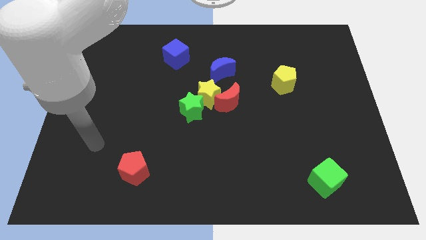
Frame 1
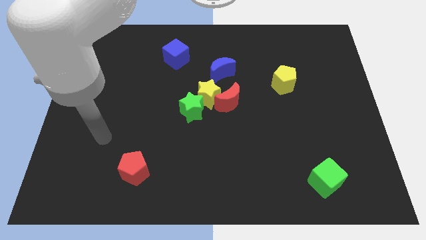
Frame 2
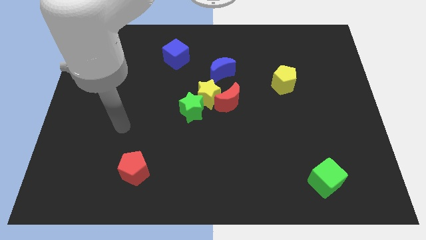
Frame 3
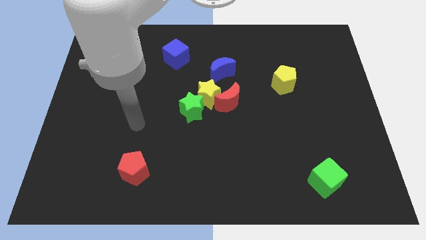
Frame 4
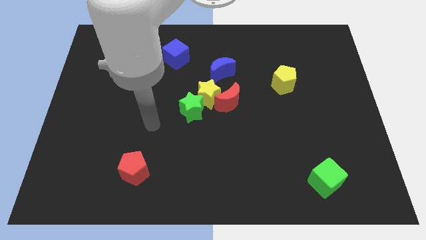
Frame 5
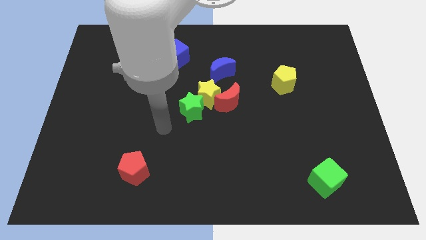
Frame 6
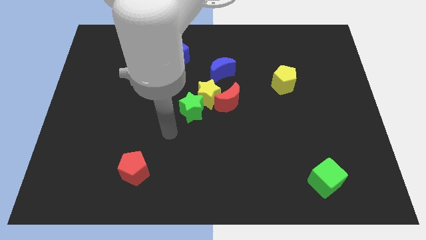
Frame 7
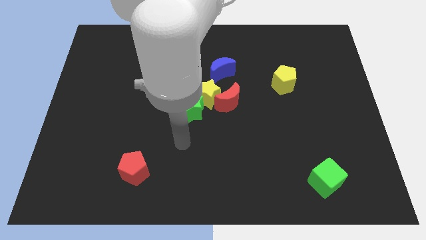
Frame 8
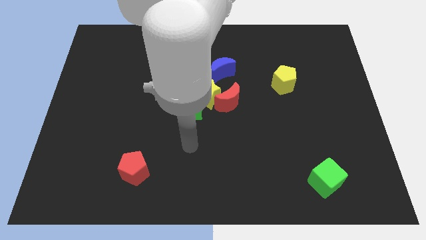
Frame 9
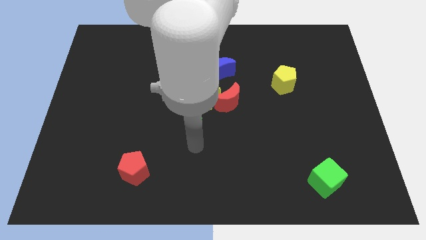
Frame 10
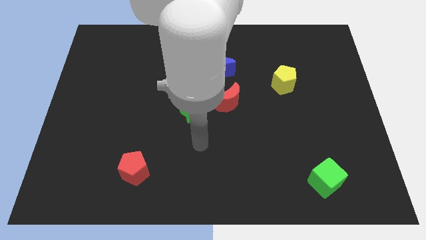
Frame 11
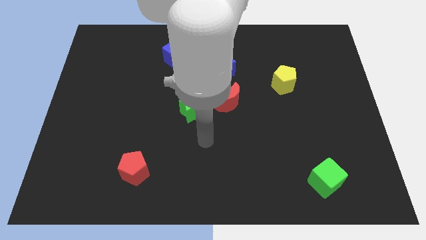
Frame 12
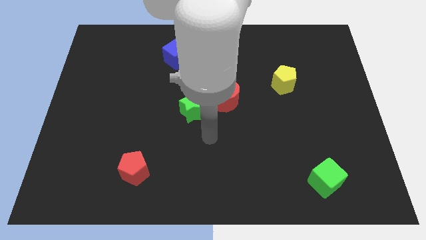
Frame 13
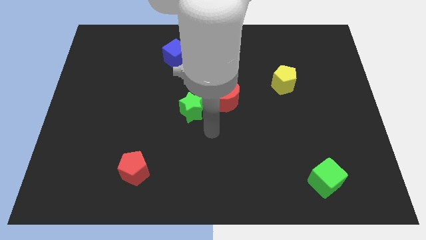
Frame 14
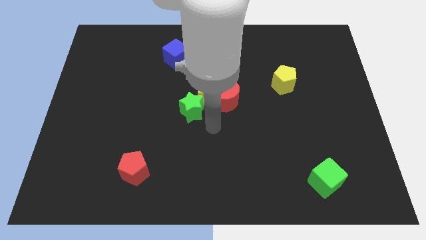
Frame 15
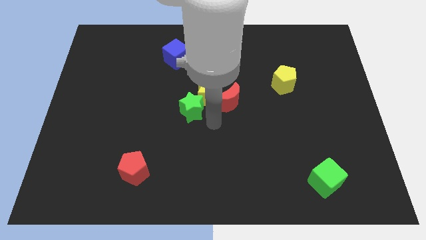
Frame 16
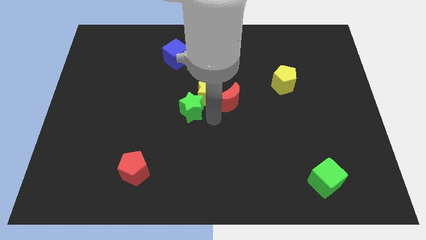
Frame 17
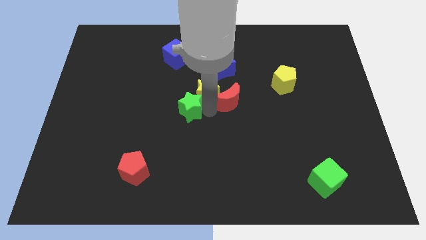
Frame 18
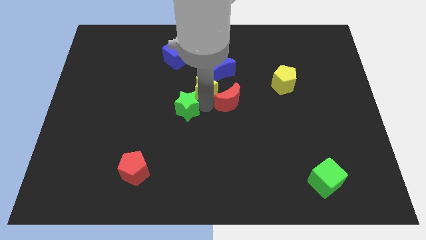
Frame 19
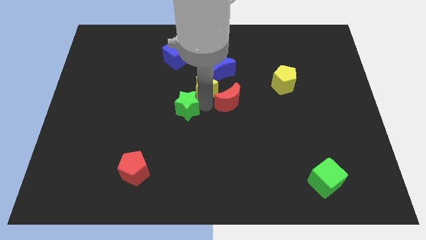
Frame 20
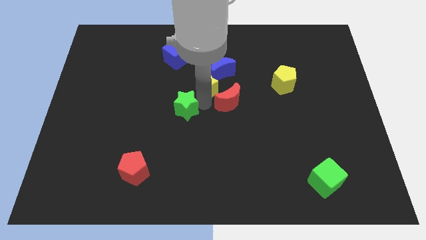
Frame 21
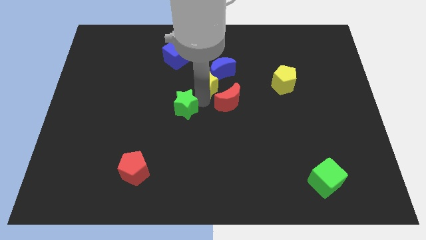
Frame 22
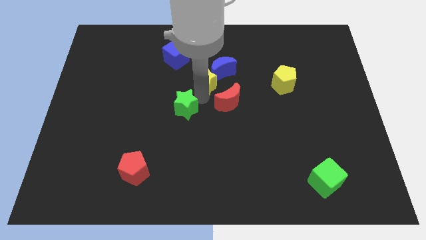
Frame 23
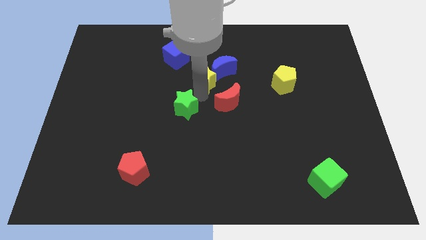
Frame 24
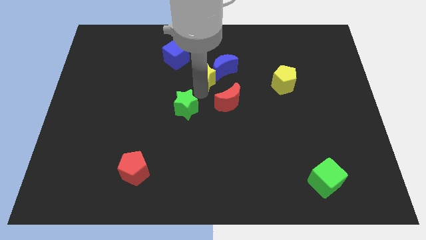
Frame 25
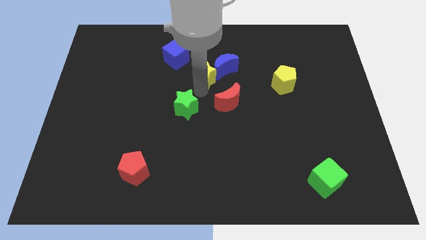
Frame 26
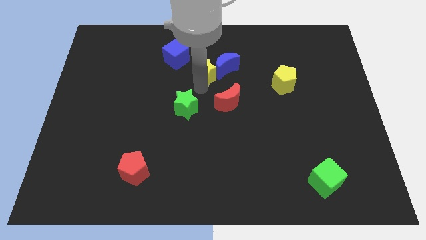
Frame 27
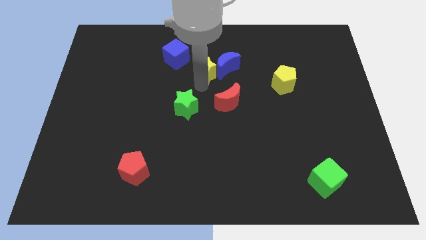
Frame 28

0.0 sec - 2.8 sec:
move the yellow star close to the blue moon

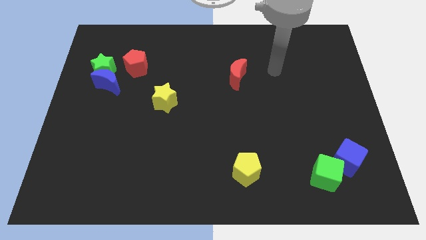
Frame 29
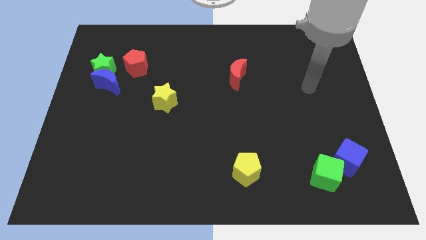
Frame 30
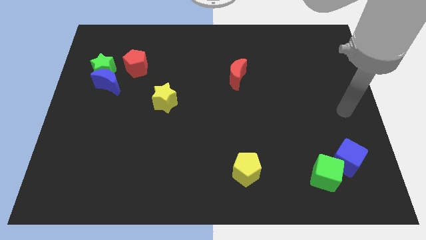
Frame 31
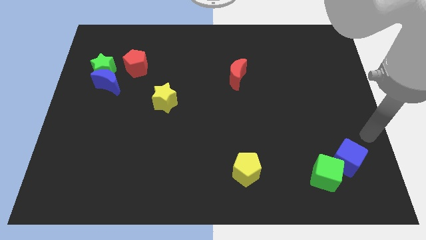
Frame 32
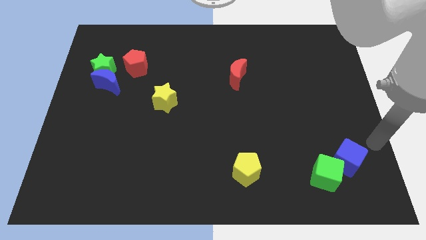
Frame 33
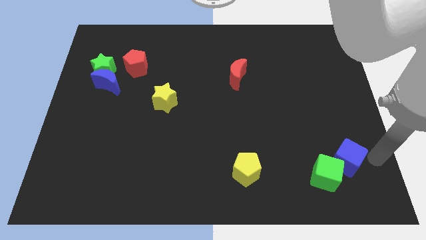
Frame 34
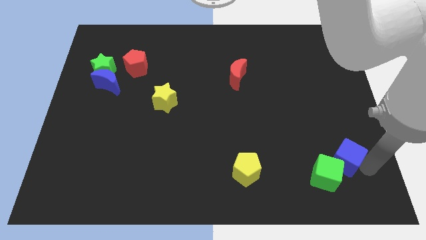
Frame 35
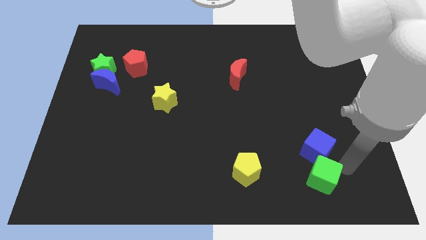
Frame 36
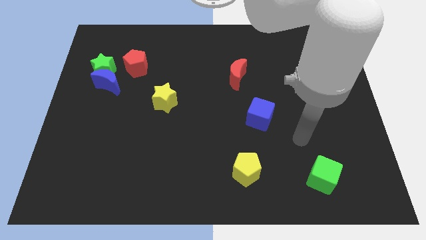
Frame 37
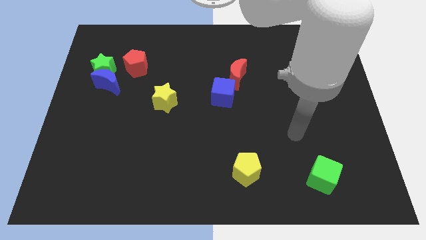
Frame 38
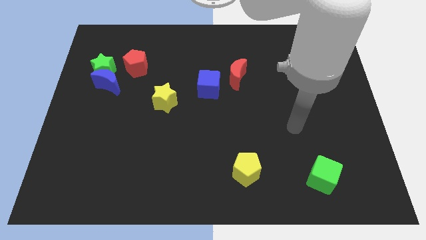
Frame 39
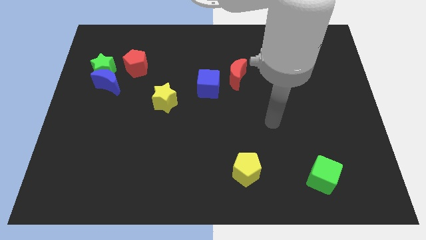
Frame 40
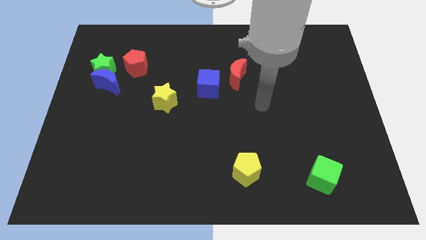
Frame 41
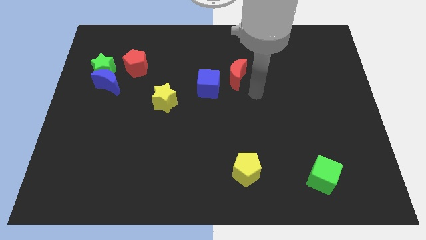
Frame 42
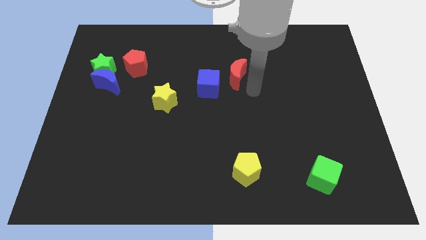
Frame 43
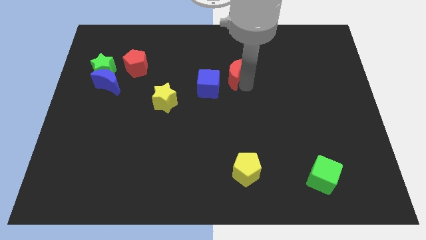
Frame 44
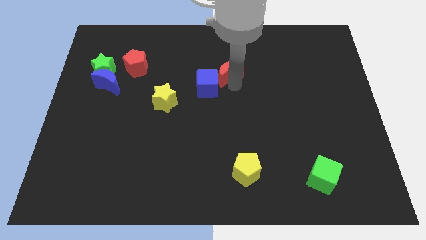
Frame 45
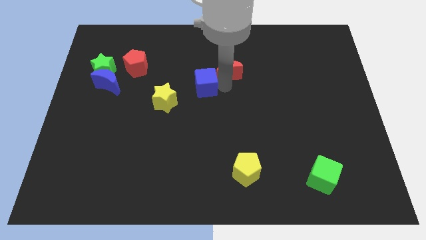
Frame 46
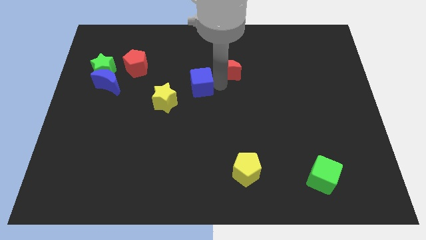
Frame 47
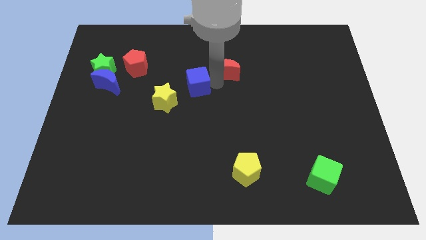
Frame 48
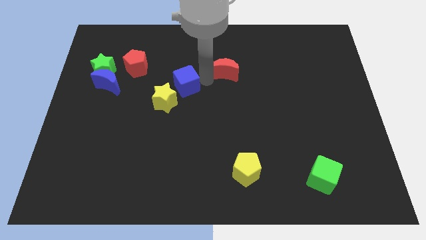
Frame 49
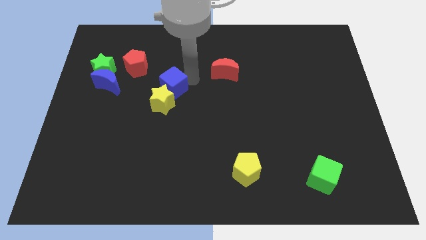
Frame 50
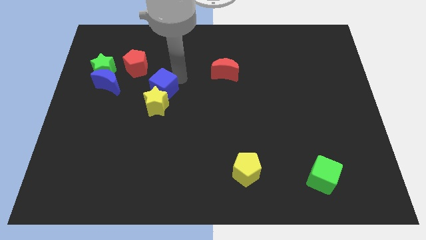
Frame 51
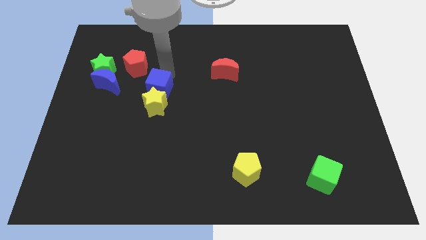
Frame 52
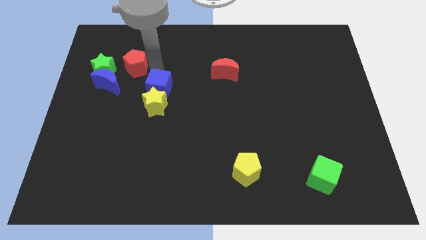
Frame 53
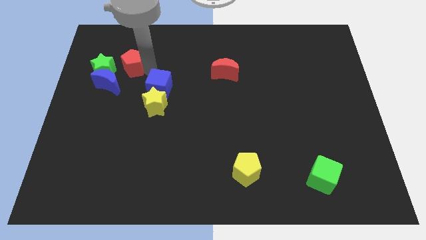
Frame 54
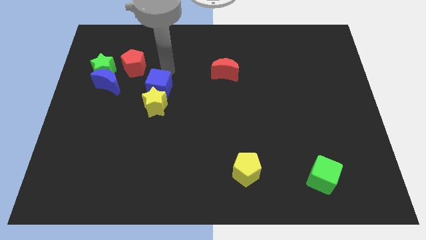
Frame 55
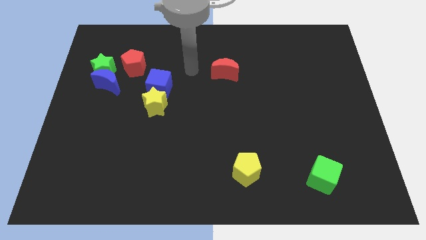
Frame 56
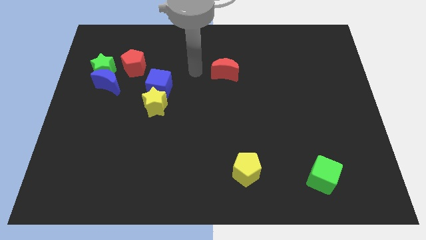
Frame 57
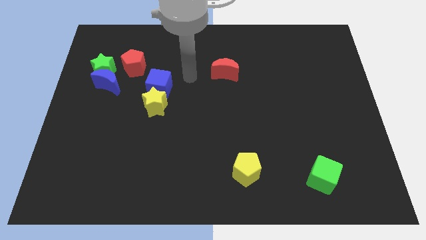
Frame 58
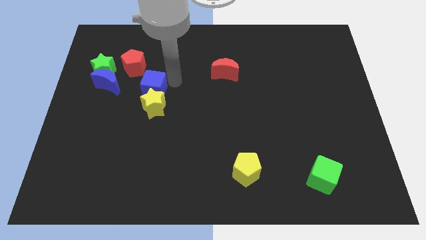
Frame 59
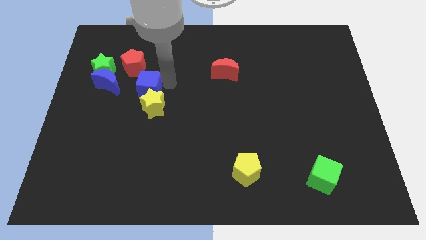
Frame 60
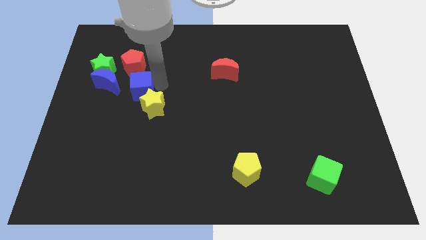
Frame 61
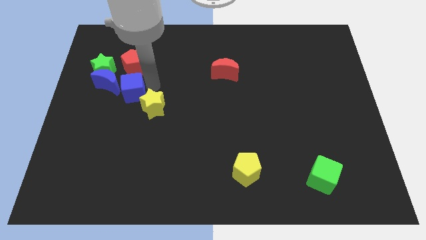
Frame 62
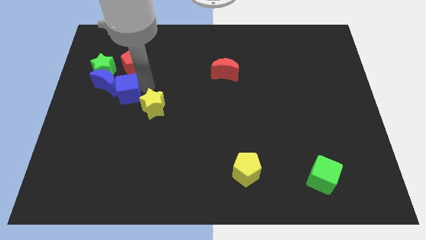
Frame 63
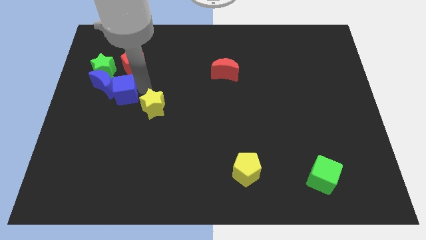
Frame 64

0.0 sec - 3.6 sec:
move the blue cube towards the blue moon

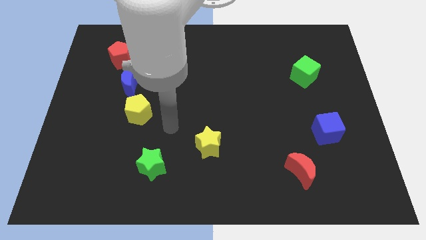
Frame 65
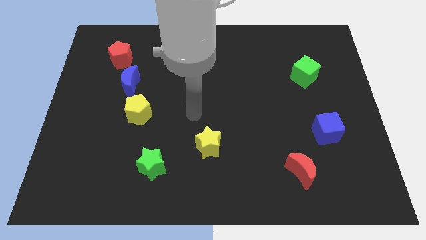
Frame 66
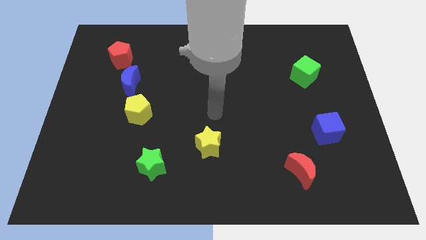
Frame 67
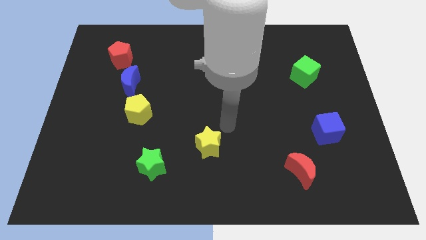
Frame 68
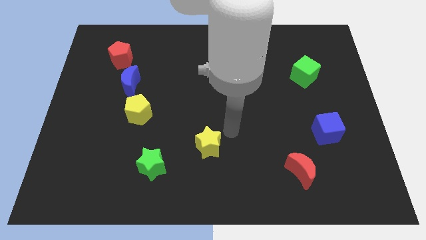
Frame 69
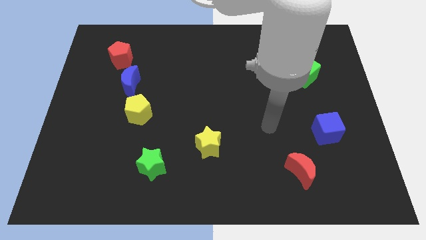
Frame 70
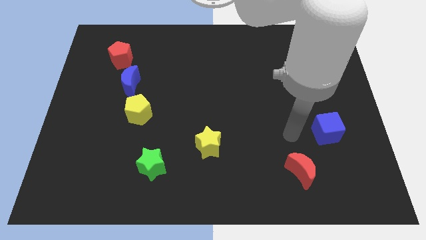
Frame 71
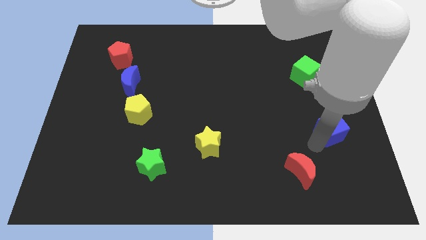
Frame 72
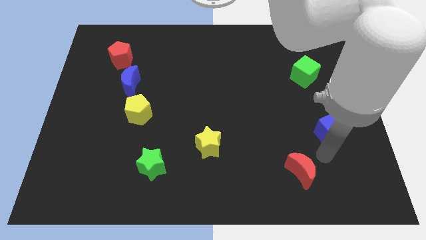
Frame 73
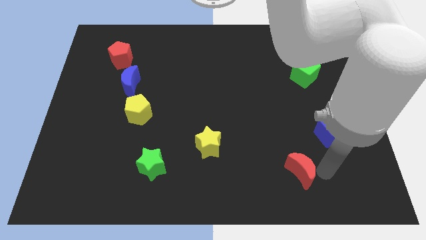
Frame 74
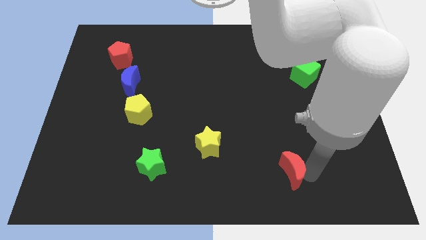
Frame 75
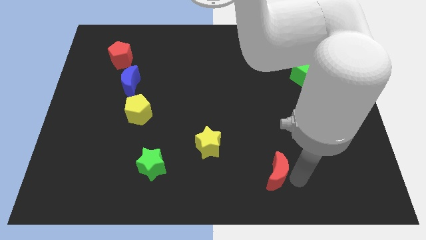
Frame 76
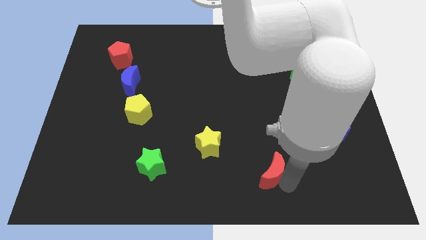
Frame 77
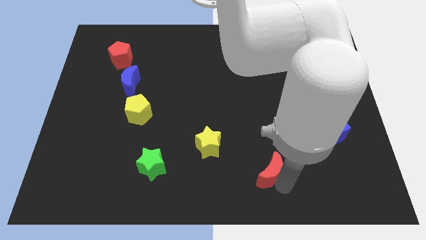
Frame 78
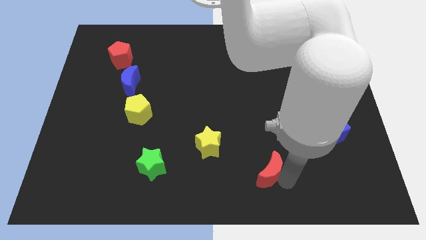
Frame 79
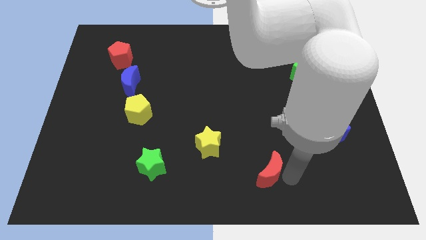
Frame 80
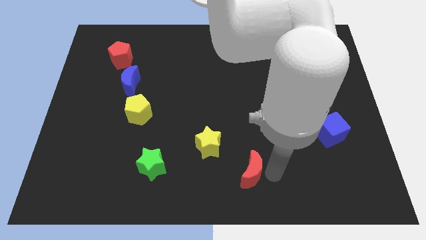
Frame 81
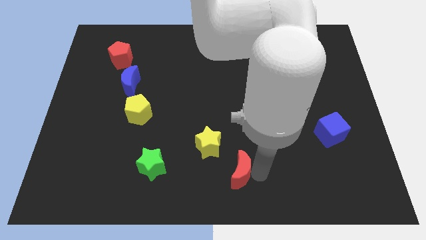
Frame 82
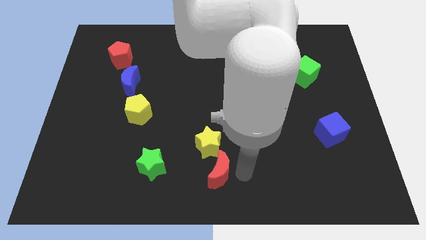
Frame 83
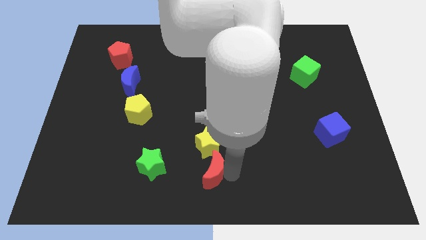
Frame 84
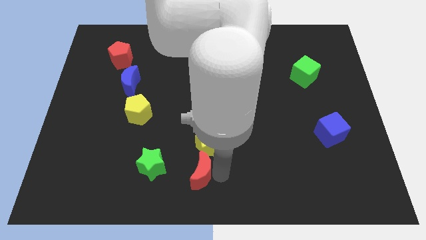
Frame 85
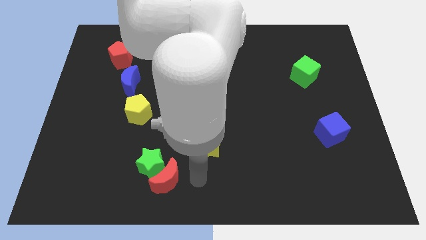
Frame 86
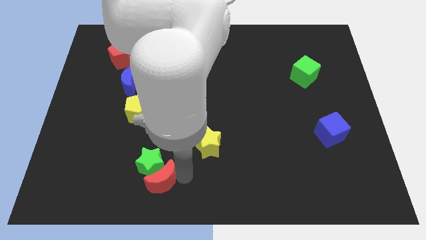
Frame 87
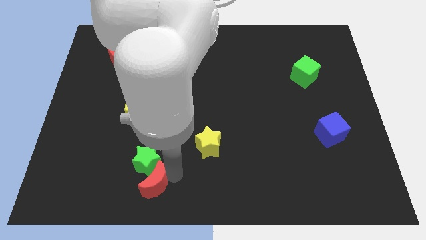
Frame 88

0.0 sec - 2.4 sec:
push the red moon close to the green star
